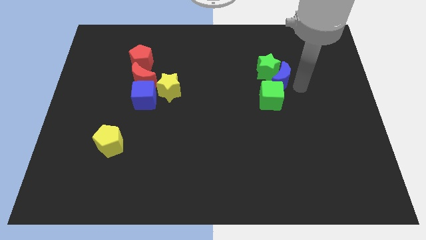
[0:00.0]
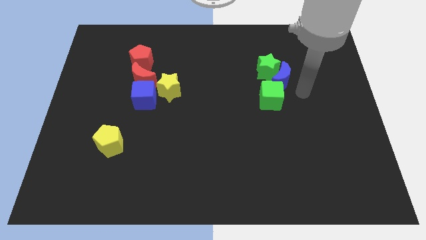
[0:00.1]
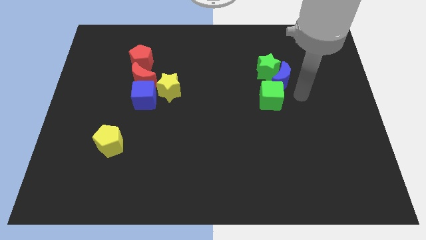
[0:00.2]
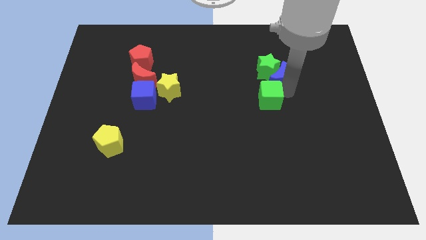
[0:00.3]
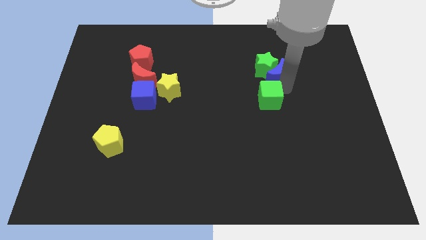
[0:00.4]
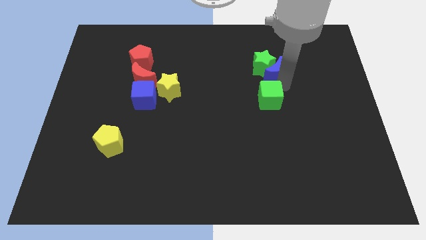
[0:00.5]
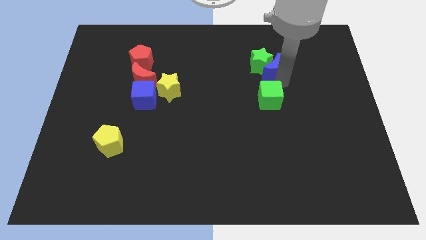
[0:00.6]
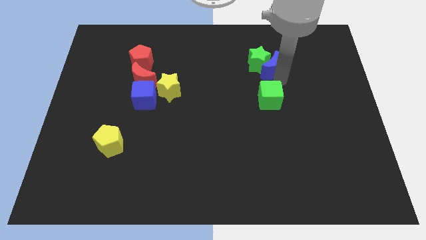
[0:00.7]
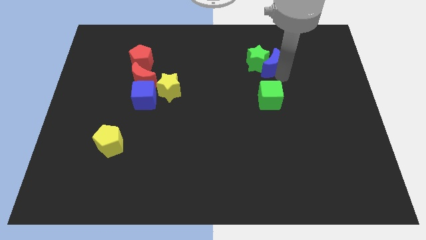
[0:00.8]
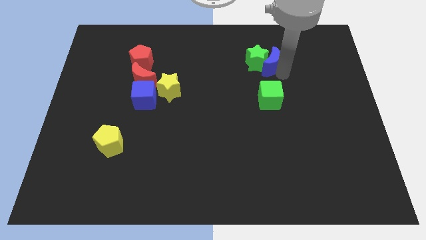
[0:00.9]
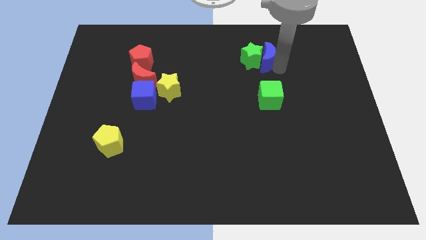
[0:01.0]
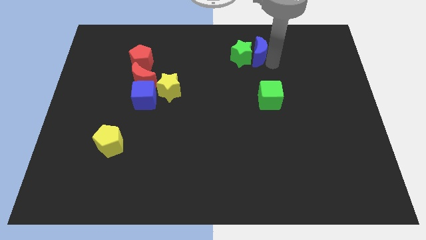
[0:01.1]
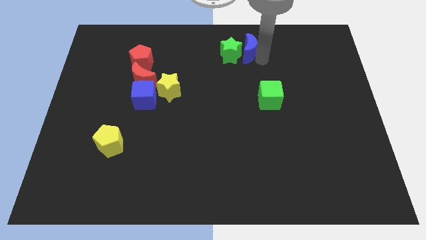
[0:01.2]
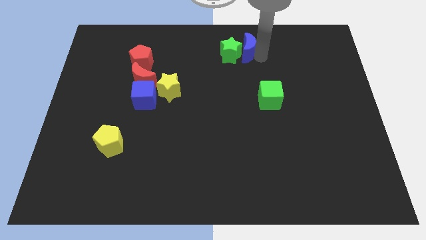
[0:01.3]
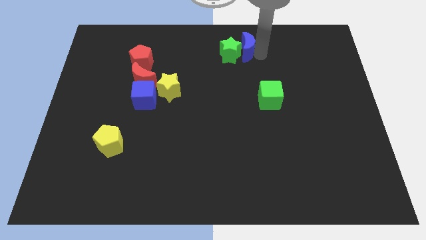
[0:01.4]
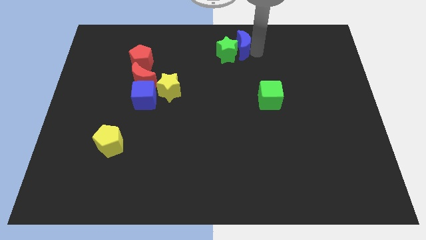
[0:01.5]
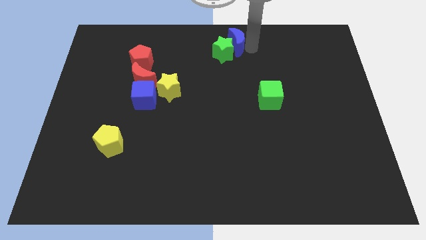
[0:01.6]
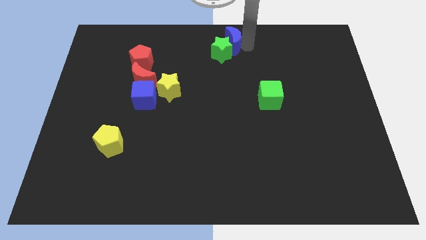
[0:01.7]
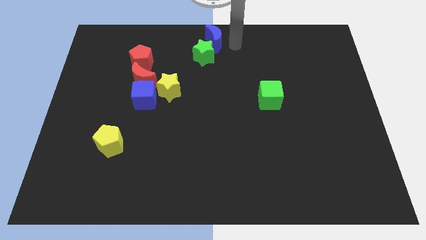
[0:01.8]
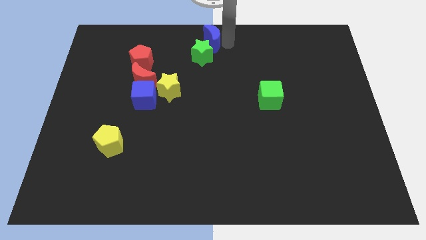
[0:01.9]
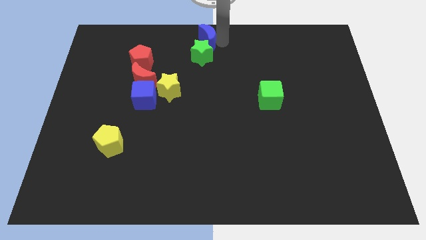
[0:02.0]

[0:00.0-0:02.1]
move the green star along with the blue moon towards the top center

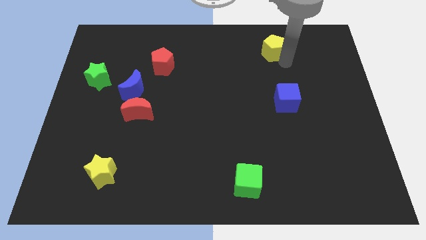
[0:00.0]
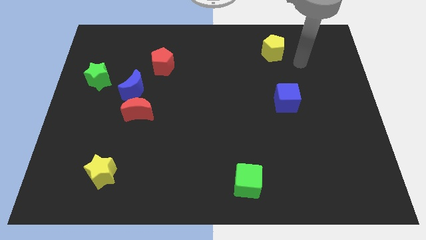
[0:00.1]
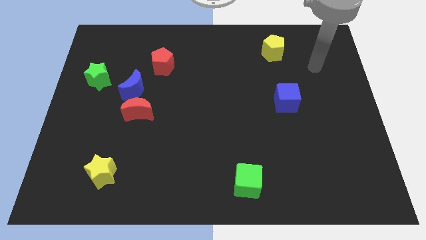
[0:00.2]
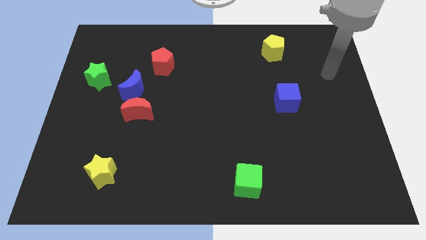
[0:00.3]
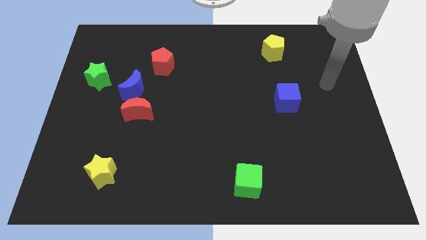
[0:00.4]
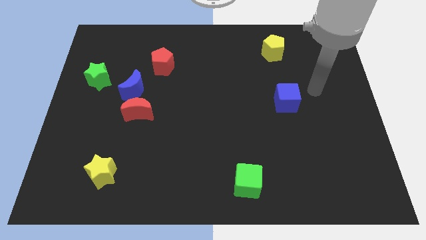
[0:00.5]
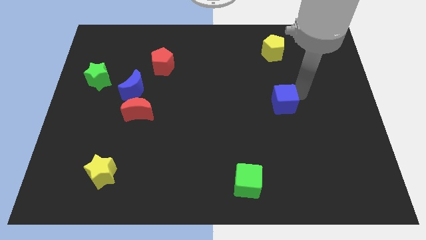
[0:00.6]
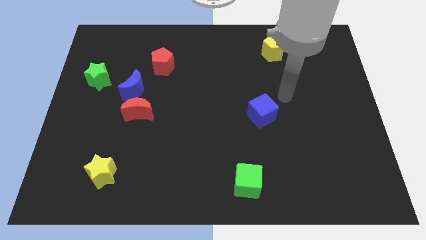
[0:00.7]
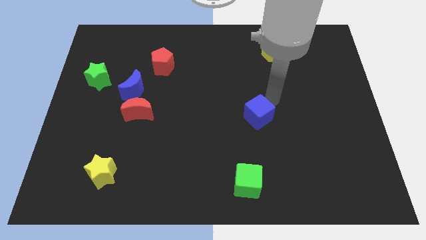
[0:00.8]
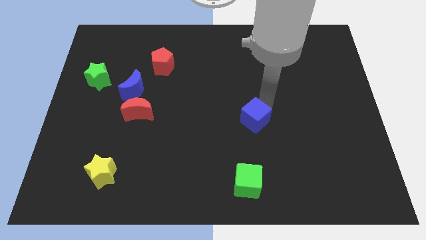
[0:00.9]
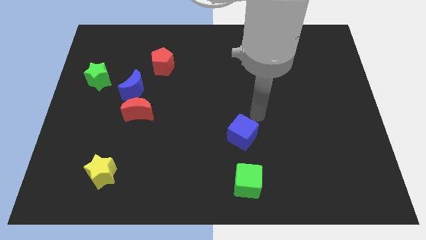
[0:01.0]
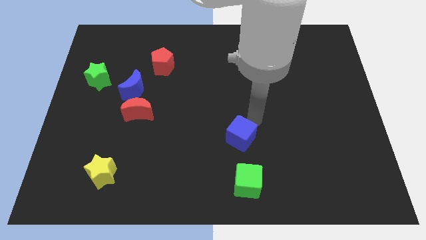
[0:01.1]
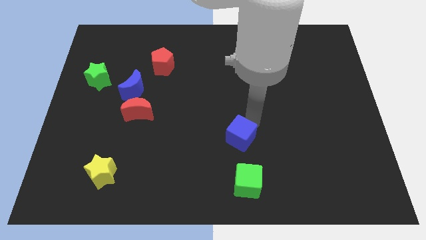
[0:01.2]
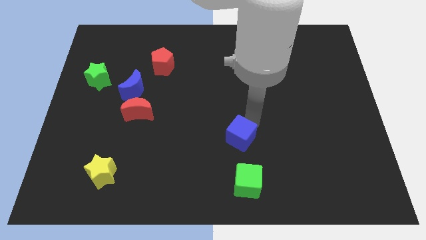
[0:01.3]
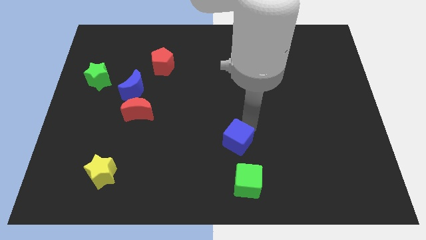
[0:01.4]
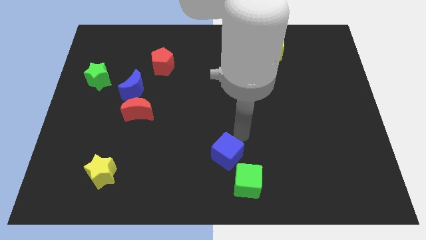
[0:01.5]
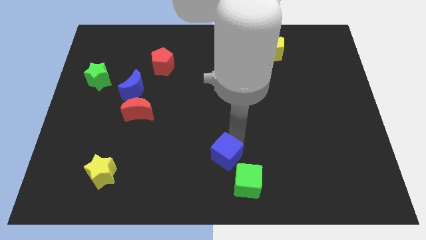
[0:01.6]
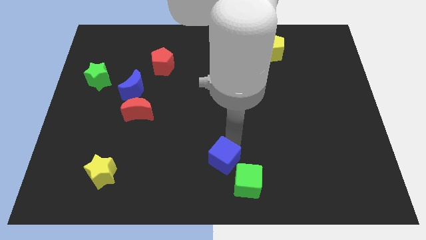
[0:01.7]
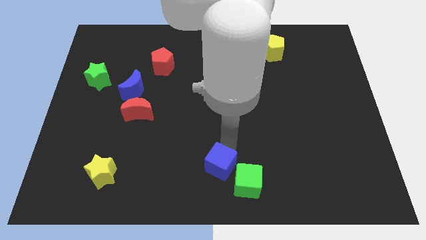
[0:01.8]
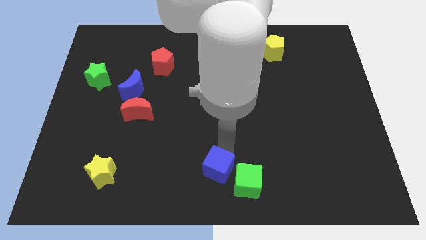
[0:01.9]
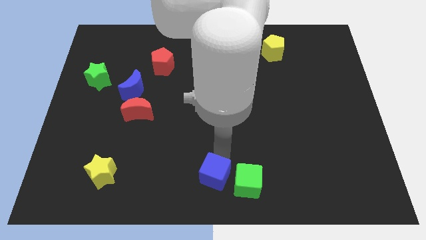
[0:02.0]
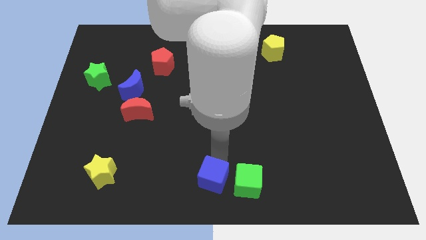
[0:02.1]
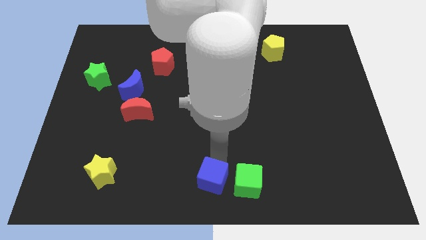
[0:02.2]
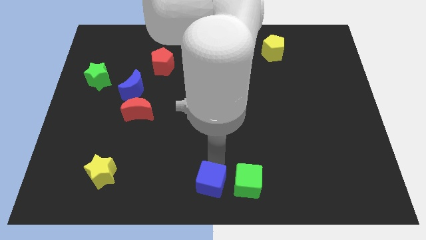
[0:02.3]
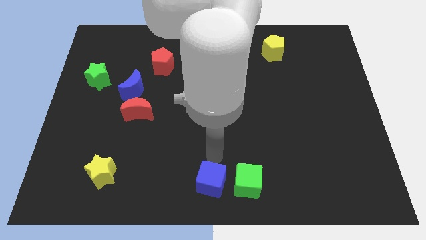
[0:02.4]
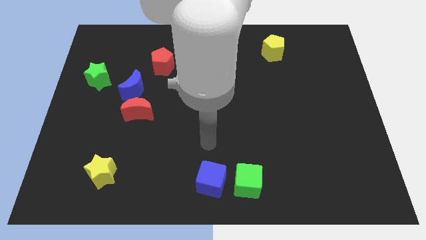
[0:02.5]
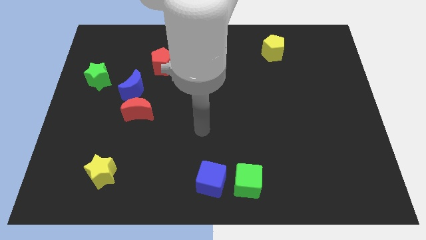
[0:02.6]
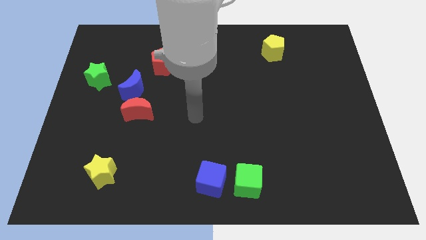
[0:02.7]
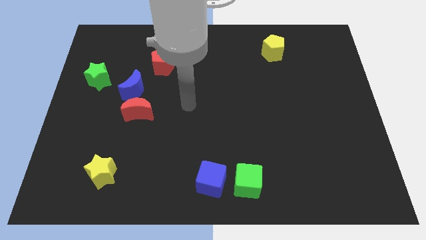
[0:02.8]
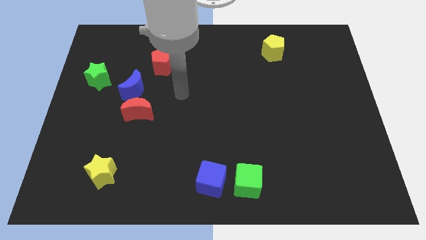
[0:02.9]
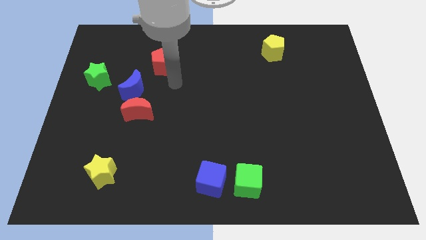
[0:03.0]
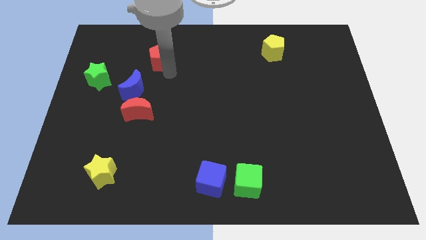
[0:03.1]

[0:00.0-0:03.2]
slide the blue cube parallel left to the green cube

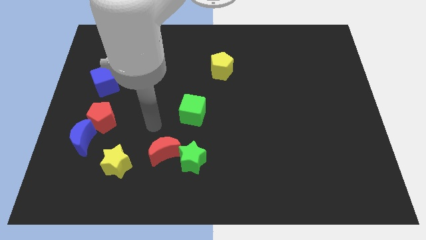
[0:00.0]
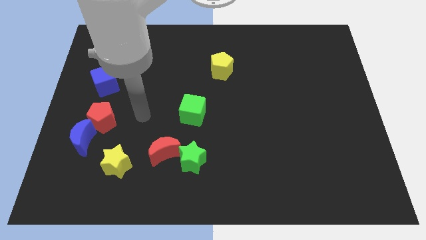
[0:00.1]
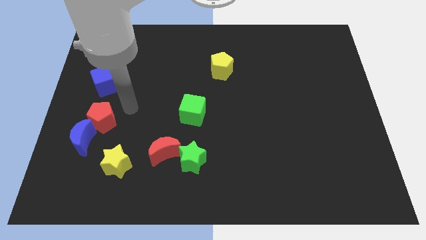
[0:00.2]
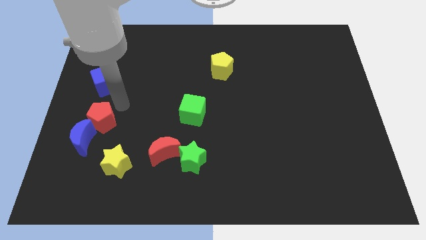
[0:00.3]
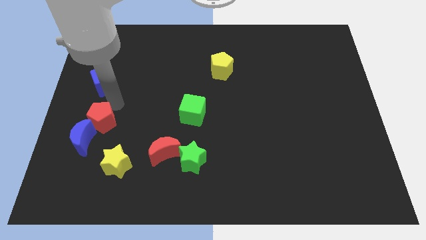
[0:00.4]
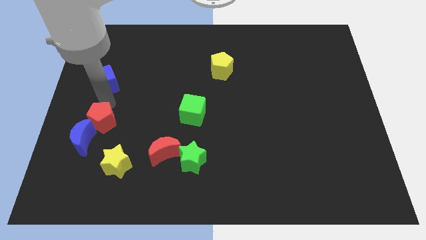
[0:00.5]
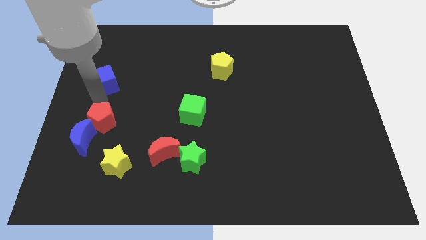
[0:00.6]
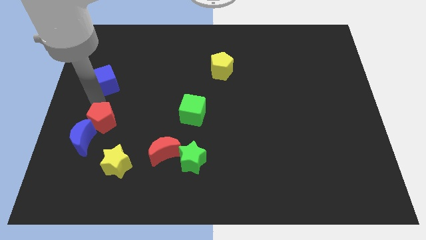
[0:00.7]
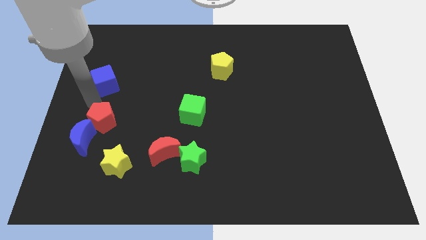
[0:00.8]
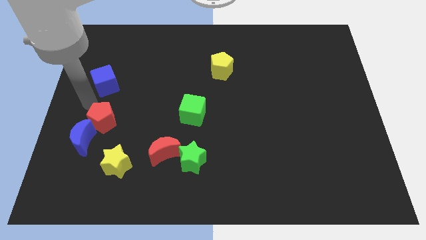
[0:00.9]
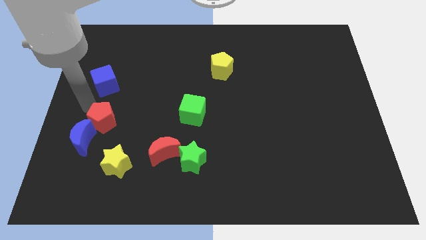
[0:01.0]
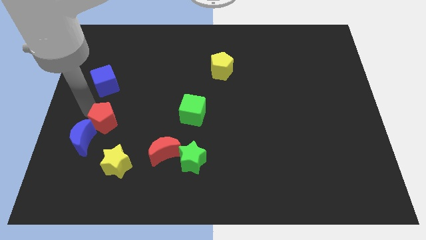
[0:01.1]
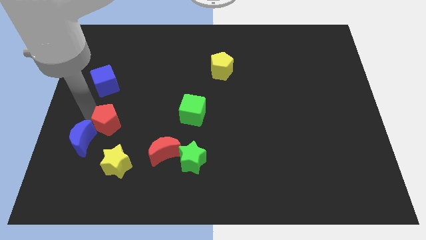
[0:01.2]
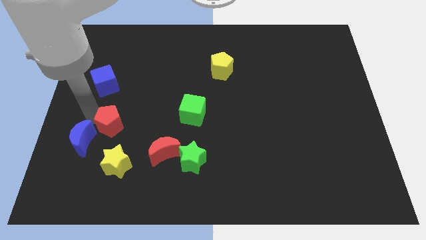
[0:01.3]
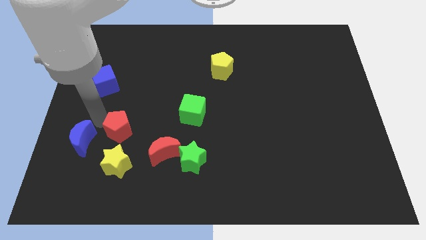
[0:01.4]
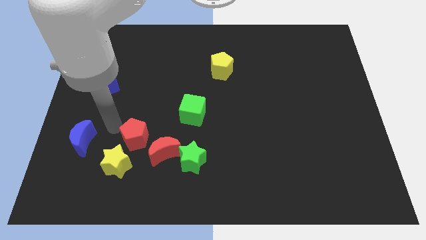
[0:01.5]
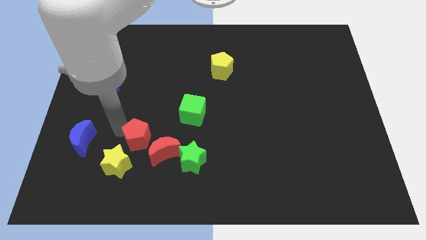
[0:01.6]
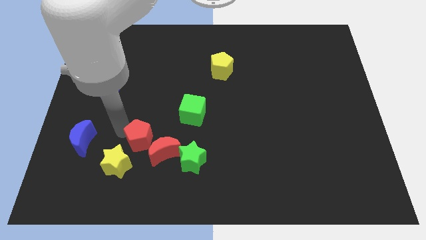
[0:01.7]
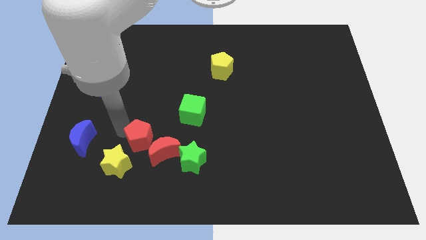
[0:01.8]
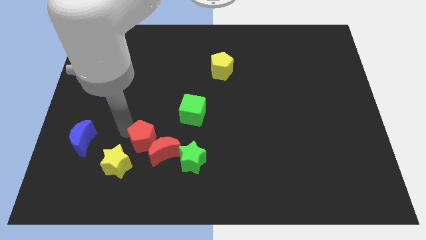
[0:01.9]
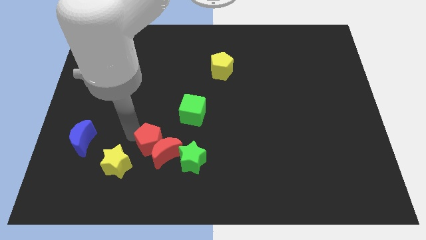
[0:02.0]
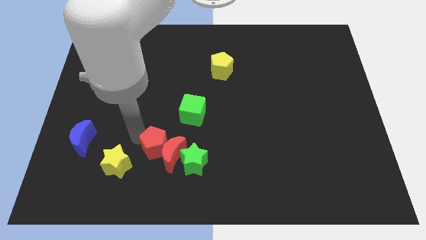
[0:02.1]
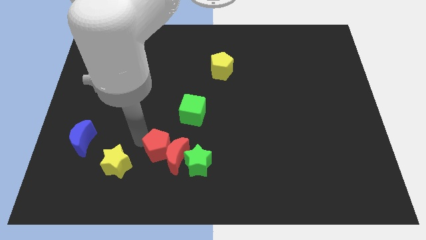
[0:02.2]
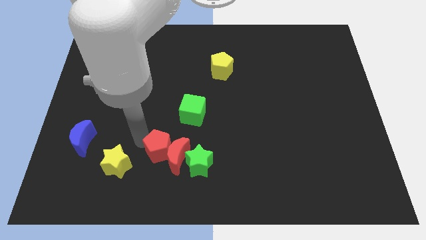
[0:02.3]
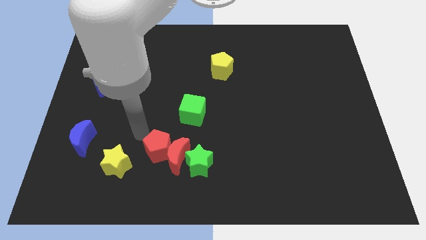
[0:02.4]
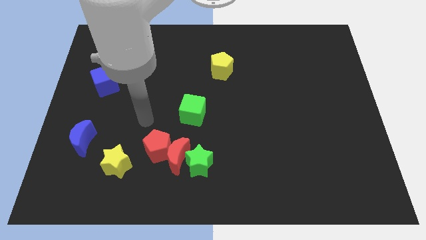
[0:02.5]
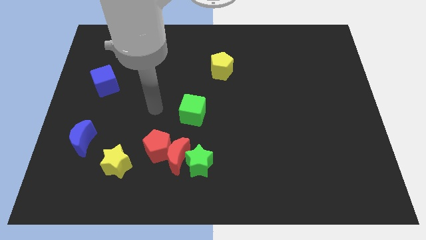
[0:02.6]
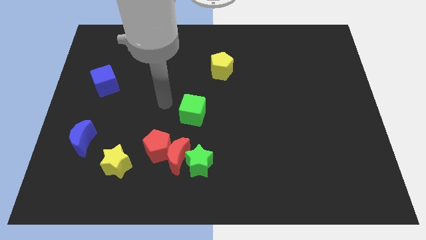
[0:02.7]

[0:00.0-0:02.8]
push the red pentagon into red moon

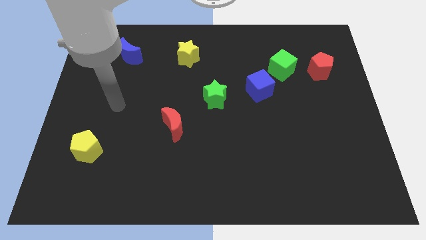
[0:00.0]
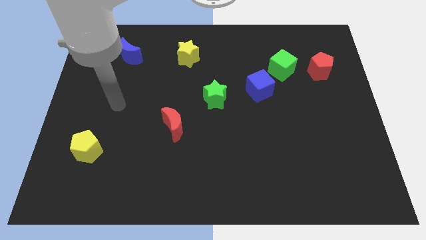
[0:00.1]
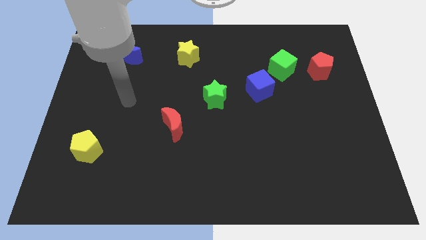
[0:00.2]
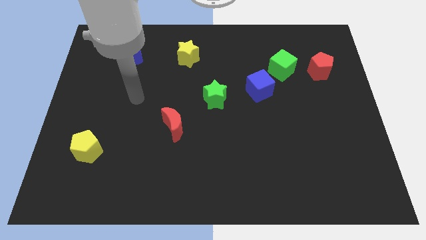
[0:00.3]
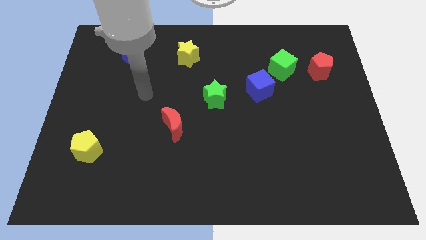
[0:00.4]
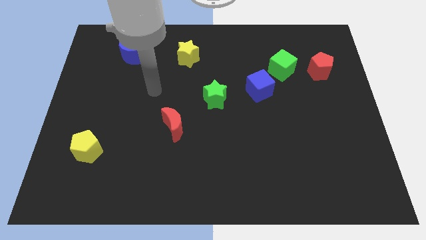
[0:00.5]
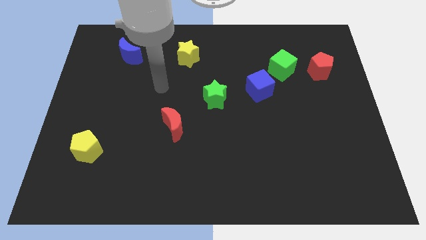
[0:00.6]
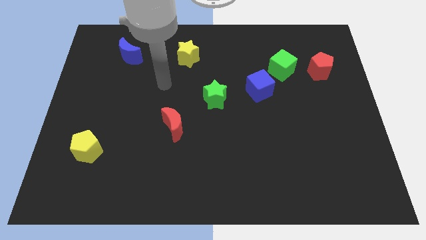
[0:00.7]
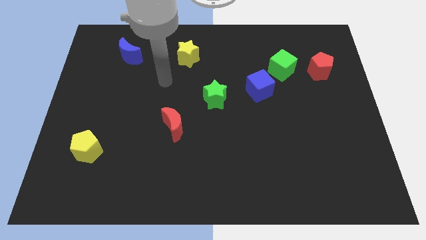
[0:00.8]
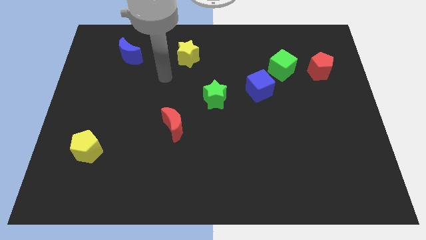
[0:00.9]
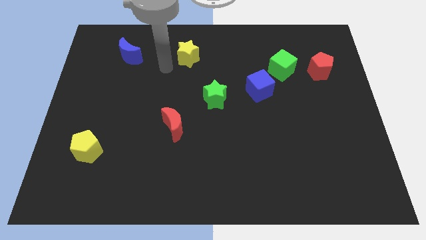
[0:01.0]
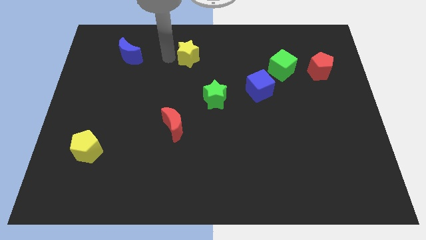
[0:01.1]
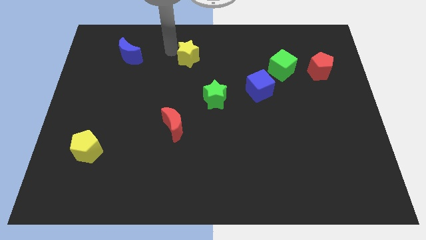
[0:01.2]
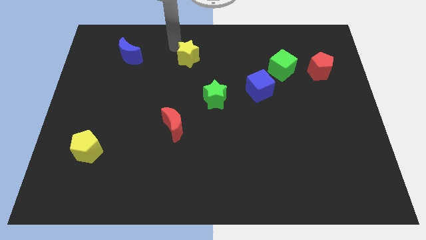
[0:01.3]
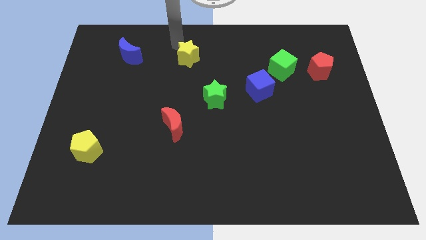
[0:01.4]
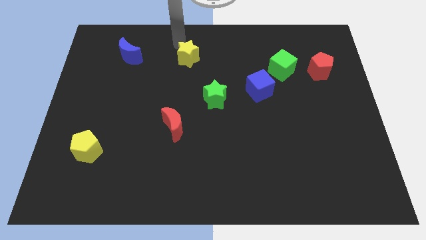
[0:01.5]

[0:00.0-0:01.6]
place the arm above the yellow star
